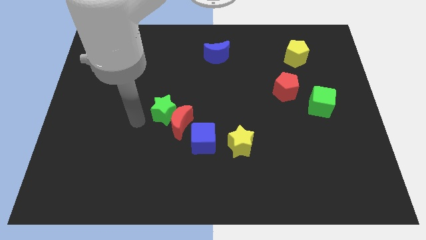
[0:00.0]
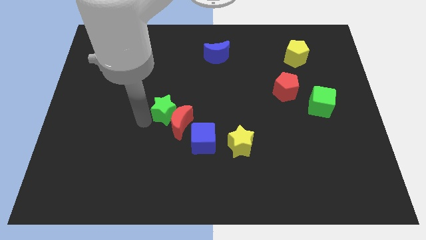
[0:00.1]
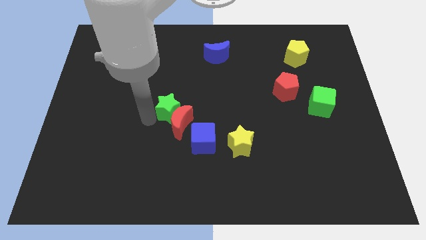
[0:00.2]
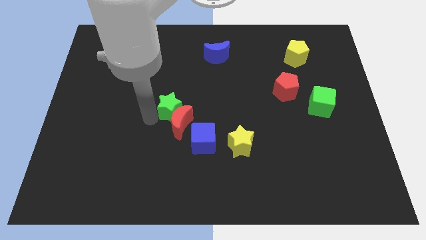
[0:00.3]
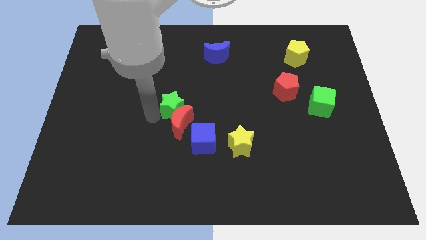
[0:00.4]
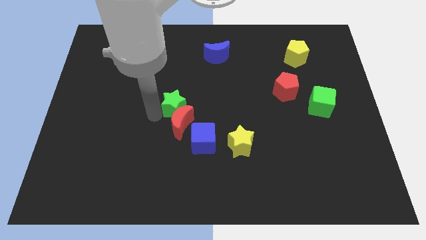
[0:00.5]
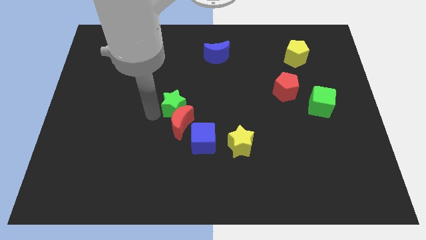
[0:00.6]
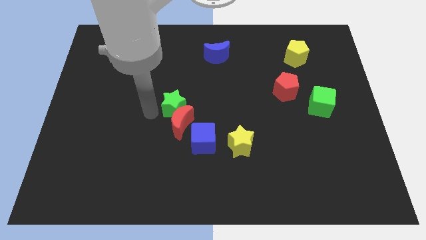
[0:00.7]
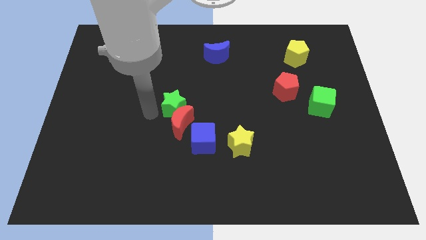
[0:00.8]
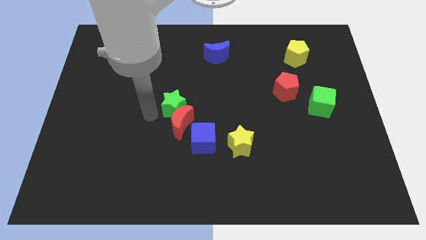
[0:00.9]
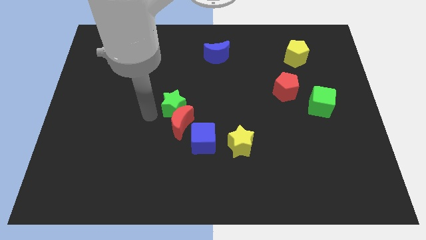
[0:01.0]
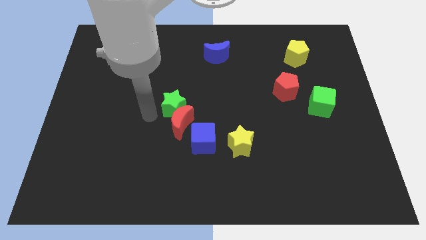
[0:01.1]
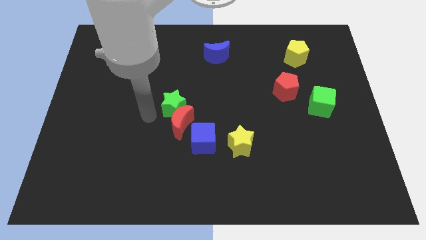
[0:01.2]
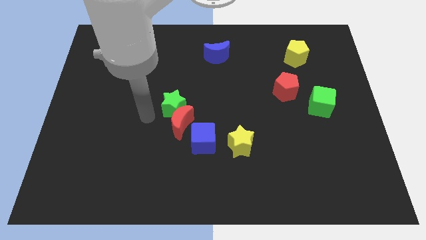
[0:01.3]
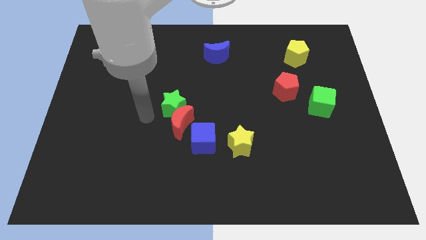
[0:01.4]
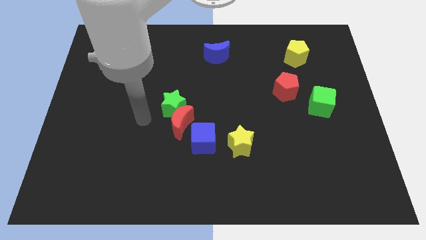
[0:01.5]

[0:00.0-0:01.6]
push green star into red crescent

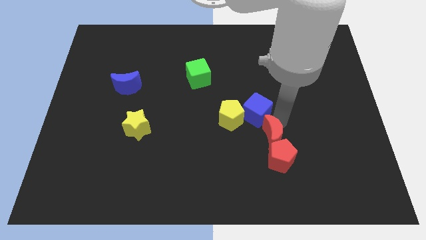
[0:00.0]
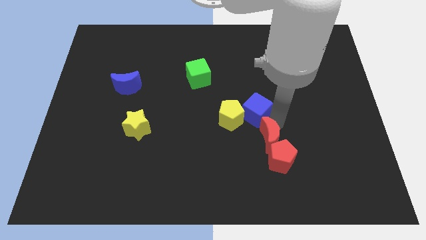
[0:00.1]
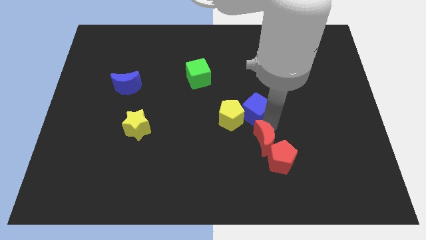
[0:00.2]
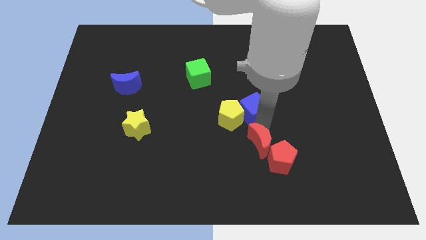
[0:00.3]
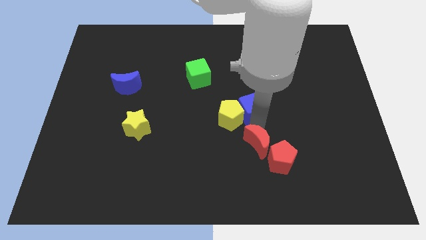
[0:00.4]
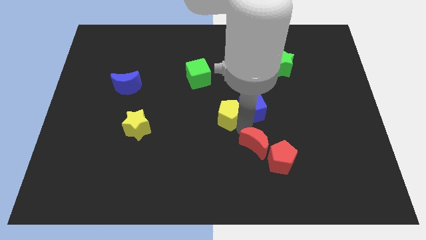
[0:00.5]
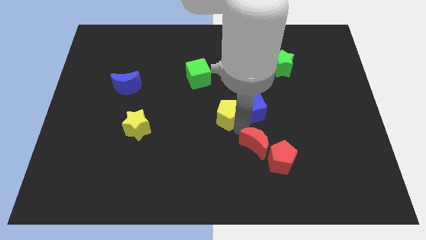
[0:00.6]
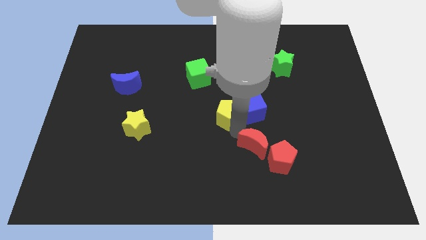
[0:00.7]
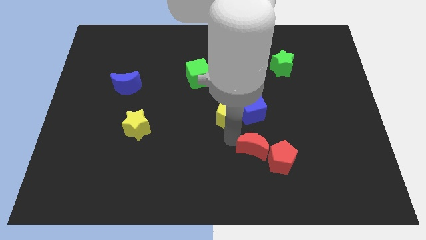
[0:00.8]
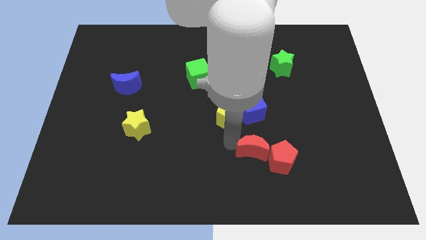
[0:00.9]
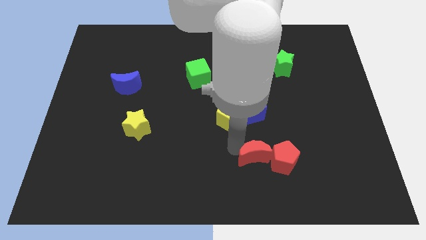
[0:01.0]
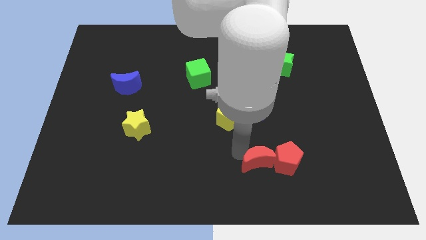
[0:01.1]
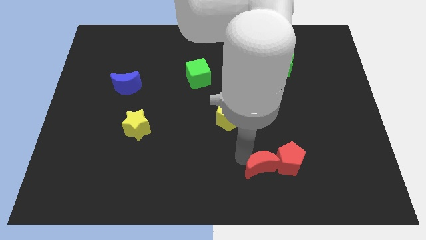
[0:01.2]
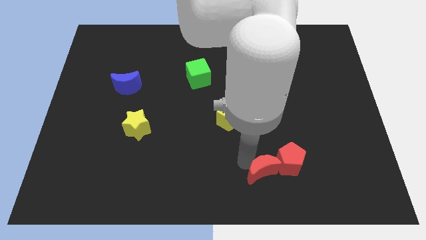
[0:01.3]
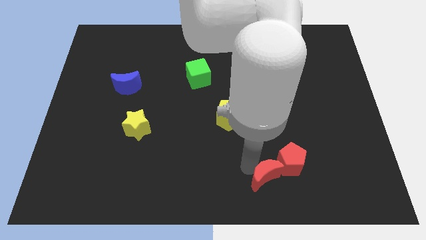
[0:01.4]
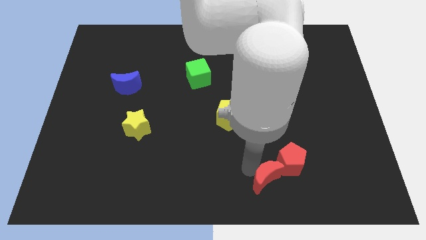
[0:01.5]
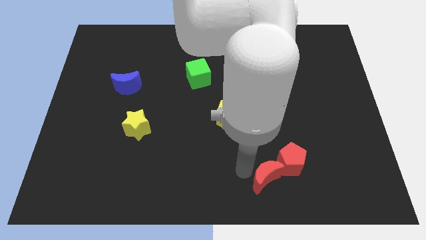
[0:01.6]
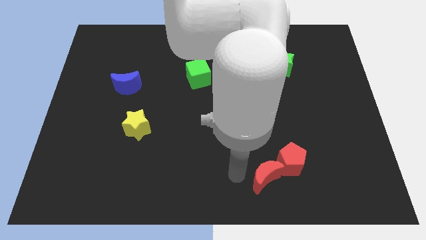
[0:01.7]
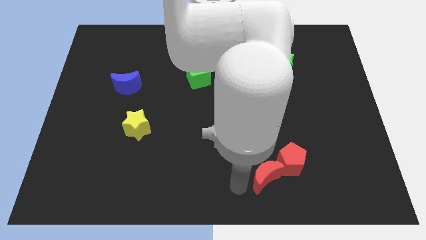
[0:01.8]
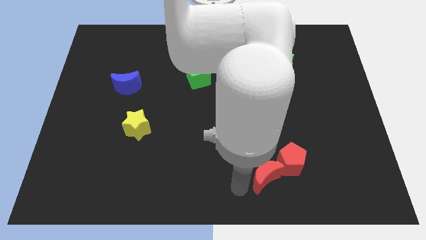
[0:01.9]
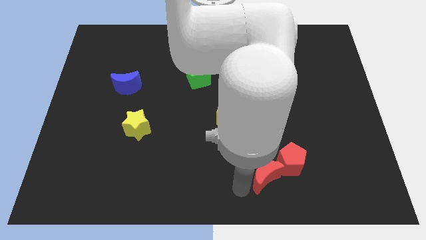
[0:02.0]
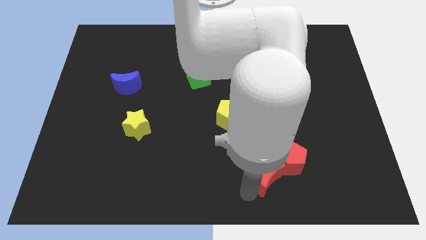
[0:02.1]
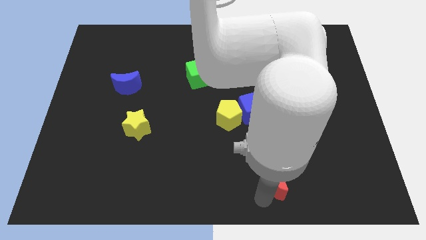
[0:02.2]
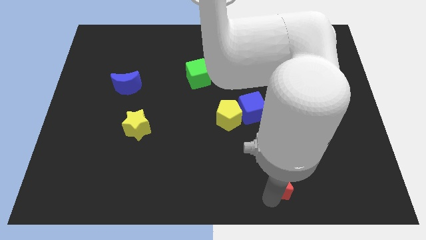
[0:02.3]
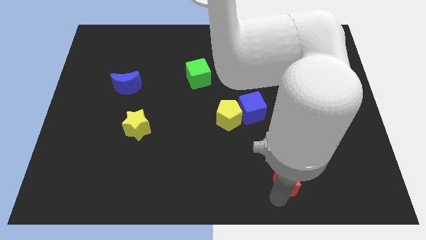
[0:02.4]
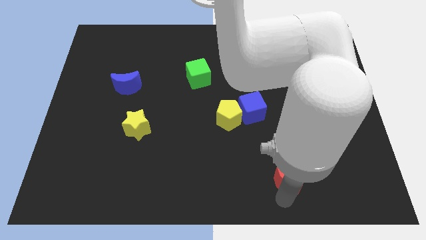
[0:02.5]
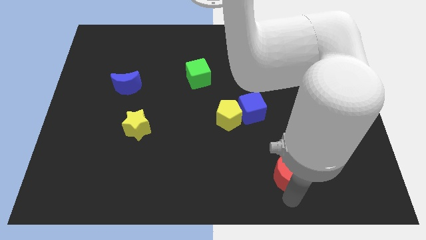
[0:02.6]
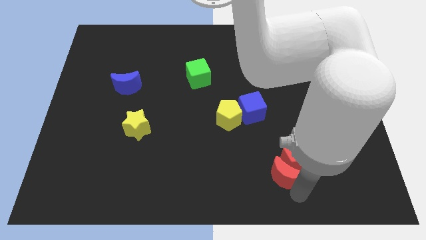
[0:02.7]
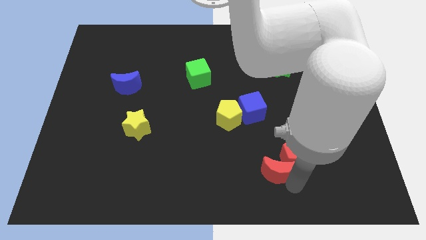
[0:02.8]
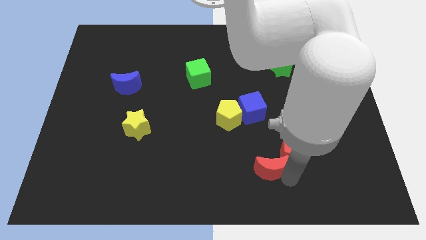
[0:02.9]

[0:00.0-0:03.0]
push the red crescent to the bottom left of the red pentagon

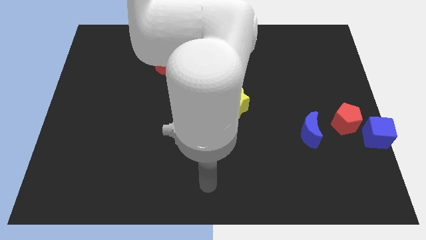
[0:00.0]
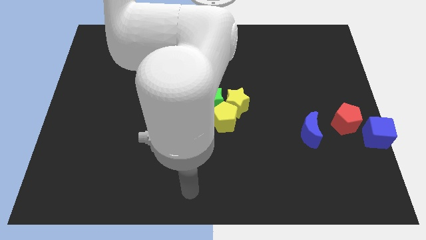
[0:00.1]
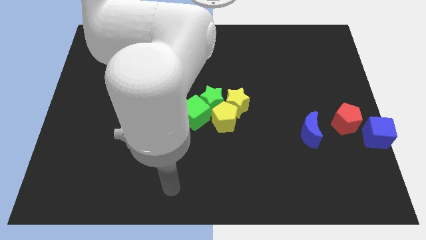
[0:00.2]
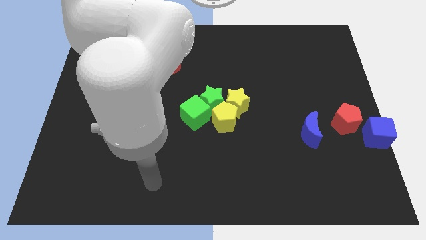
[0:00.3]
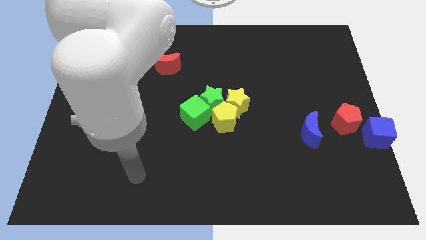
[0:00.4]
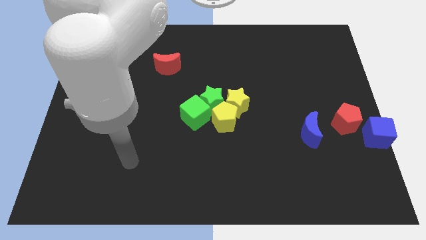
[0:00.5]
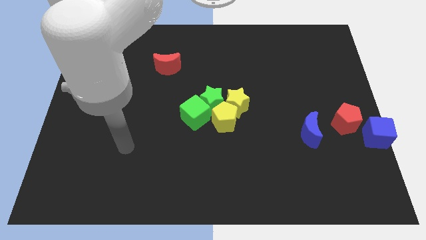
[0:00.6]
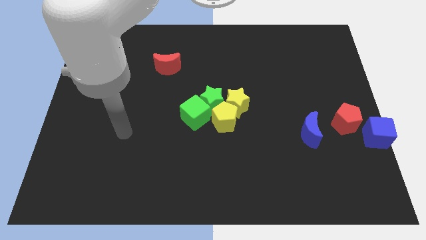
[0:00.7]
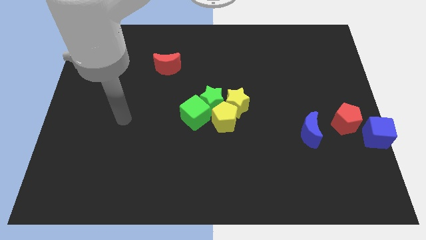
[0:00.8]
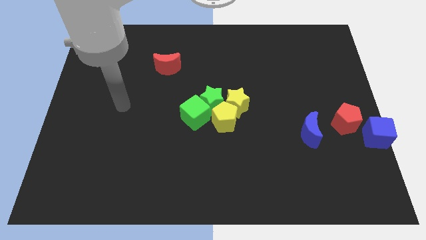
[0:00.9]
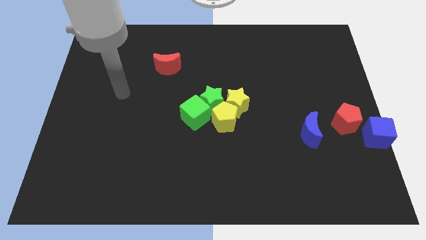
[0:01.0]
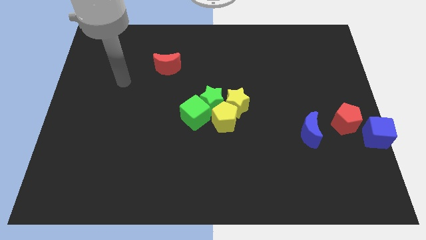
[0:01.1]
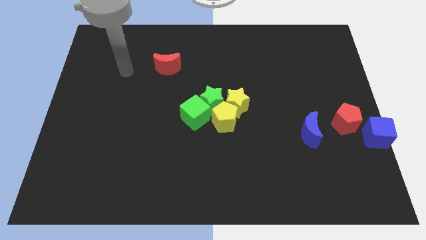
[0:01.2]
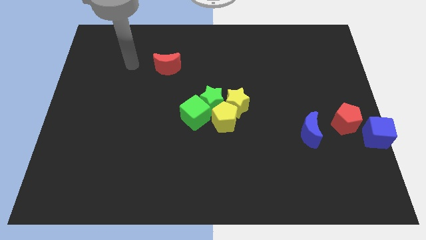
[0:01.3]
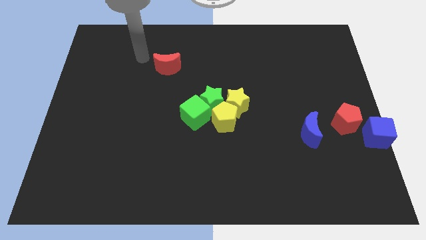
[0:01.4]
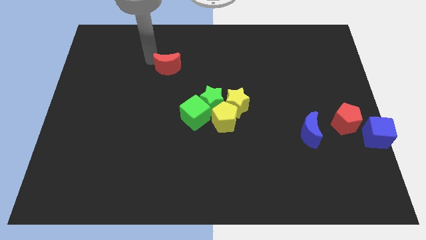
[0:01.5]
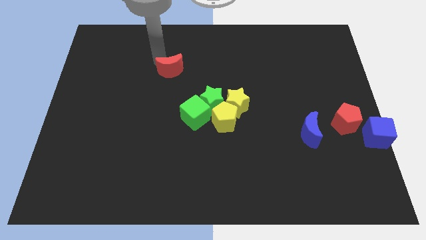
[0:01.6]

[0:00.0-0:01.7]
place your arm at the top of the red crescent

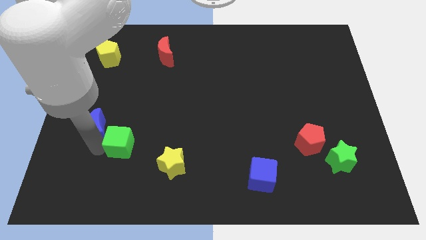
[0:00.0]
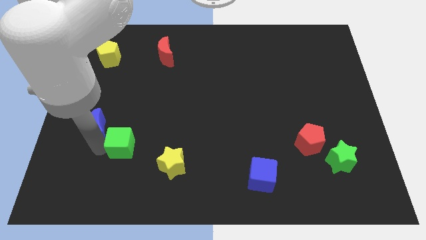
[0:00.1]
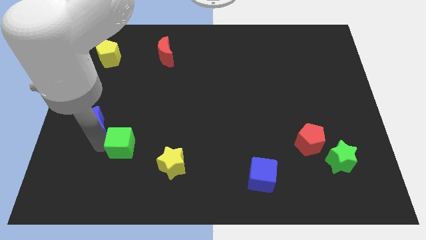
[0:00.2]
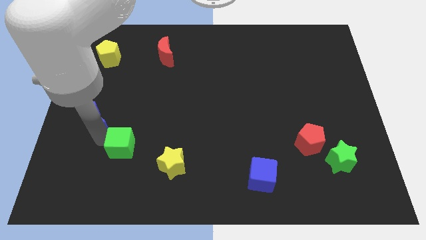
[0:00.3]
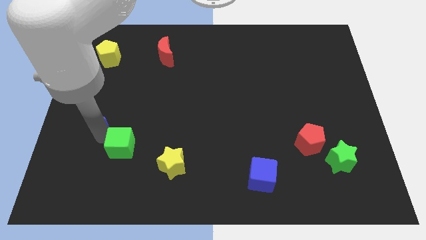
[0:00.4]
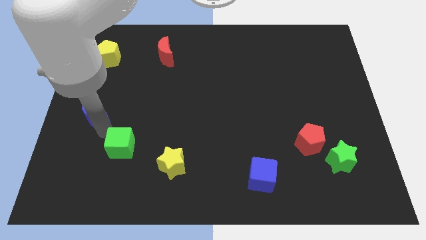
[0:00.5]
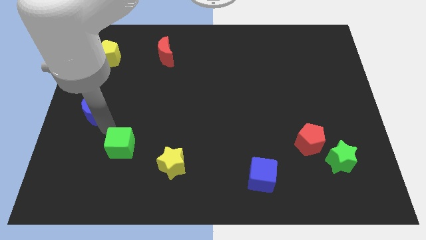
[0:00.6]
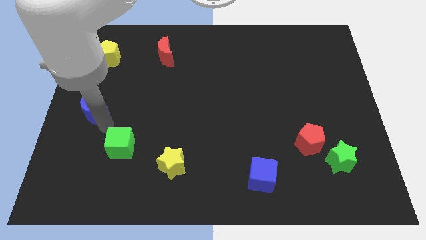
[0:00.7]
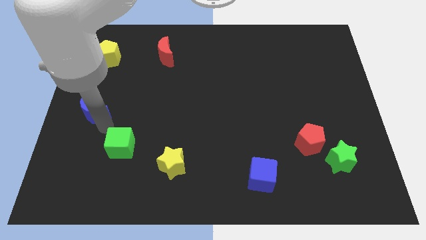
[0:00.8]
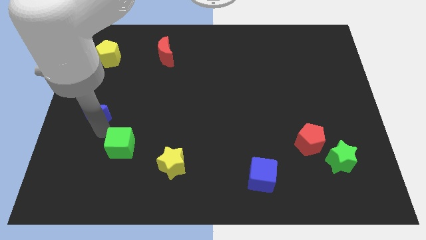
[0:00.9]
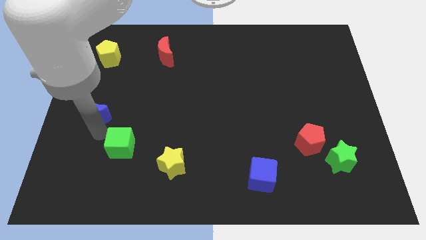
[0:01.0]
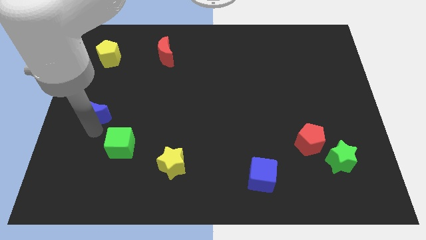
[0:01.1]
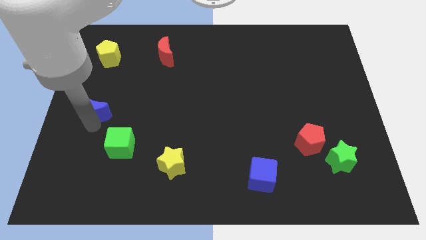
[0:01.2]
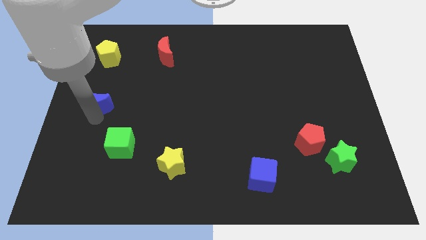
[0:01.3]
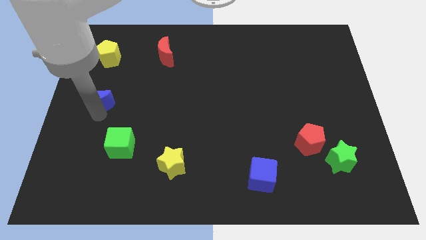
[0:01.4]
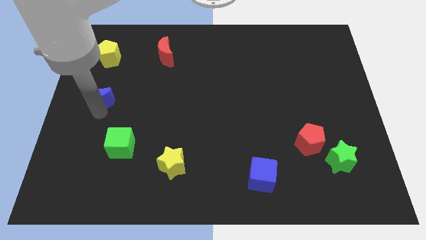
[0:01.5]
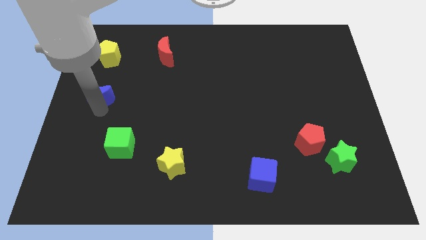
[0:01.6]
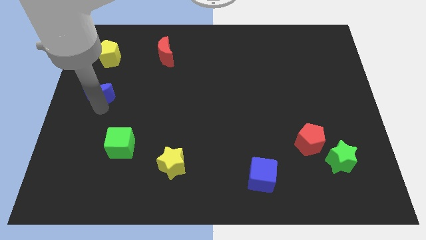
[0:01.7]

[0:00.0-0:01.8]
separate the blue from green cube

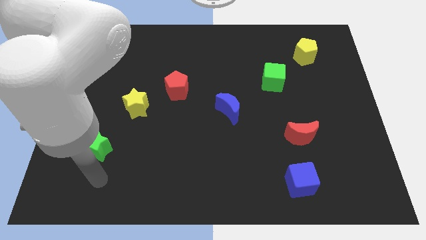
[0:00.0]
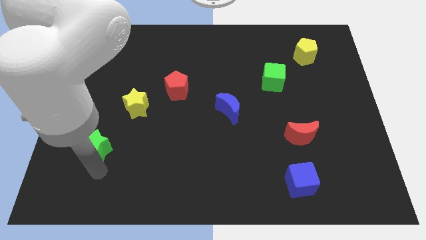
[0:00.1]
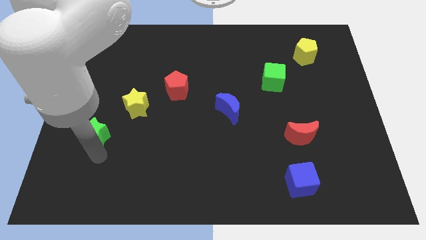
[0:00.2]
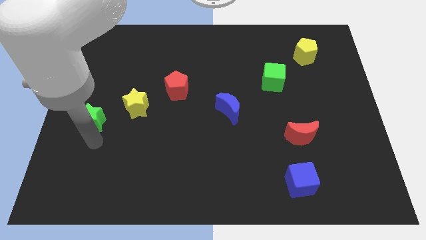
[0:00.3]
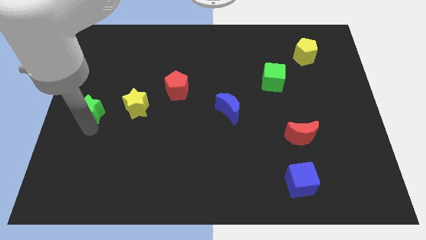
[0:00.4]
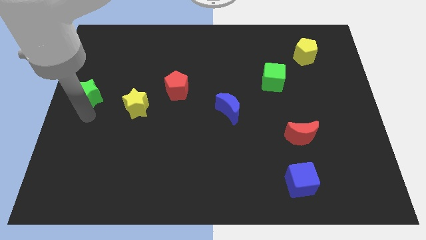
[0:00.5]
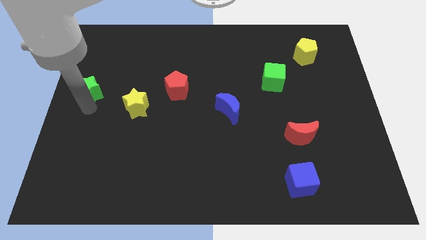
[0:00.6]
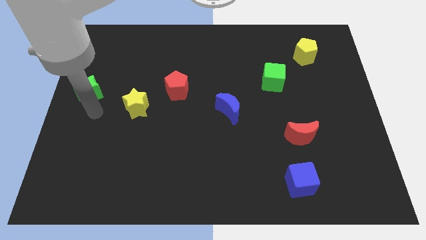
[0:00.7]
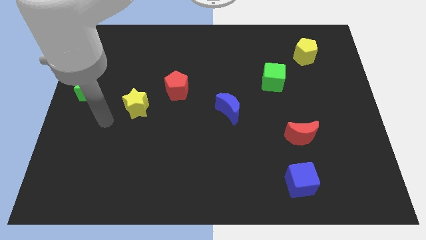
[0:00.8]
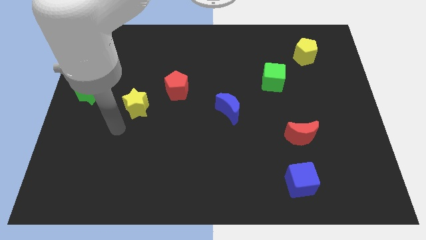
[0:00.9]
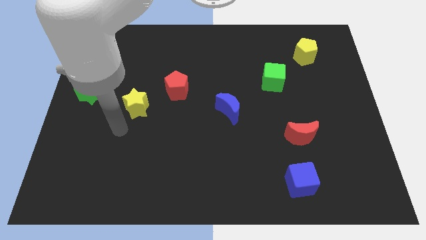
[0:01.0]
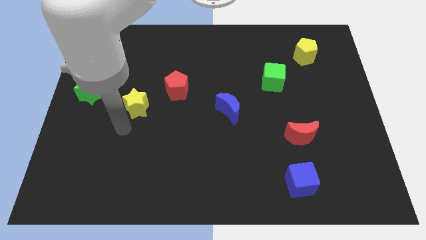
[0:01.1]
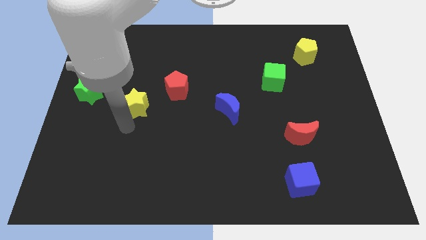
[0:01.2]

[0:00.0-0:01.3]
push the green star to the top of the board
